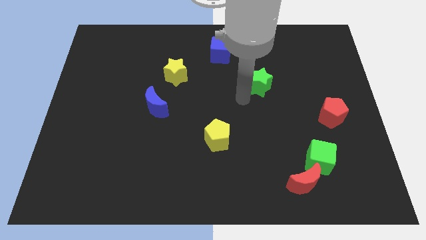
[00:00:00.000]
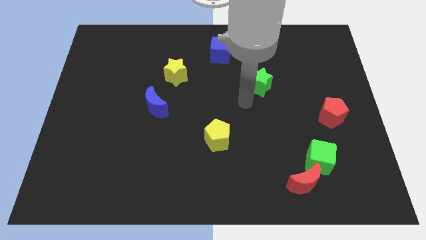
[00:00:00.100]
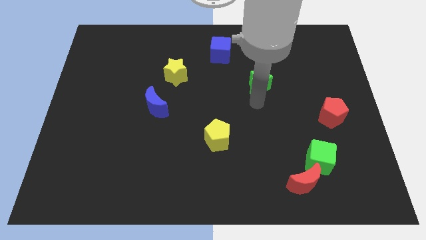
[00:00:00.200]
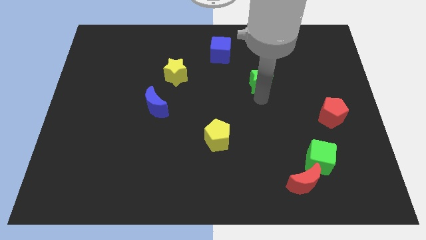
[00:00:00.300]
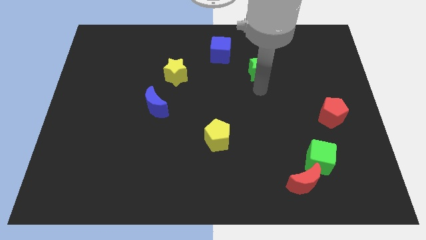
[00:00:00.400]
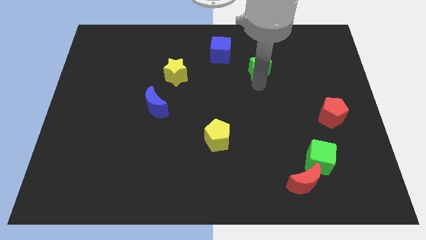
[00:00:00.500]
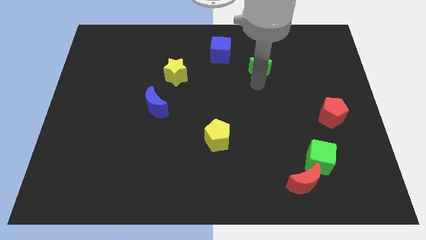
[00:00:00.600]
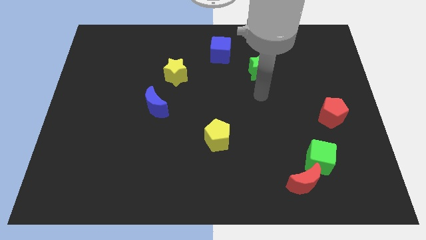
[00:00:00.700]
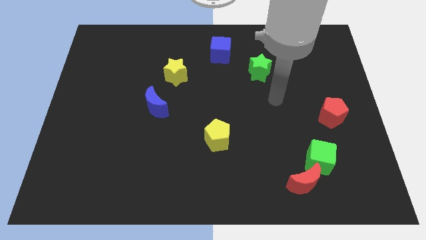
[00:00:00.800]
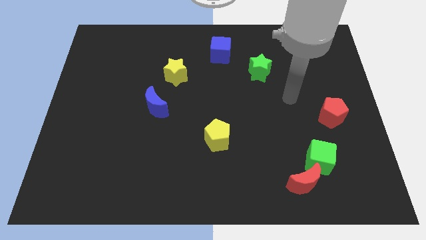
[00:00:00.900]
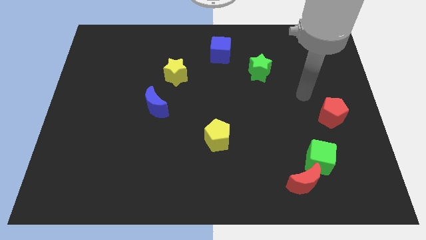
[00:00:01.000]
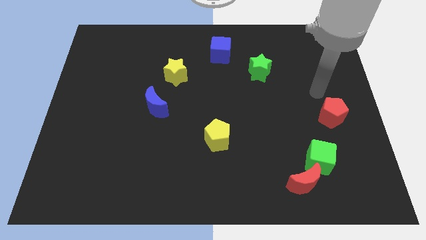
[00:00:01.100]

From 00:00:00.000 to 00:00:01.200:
place green star to the bottom right of blue cube

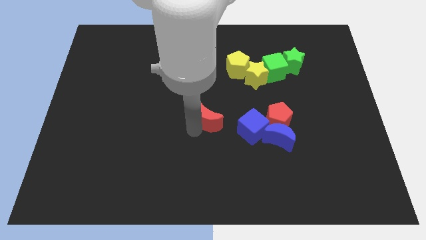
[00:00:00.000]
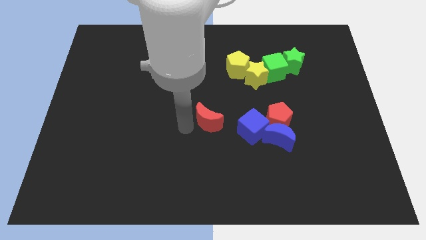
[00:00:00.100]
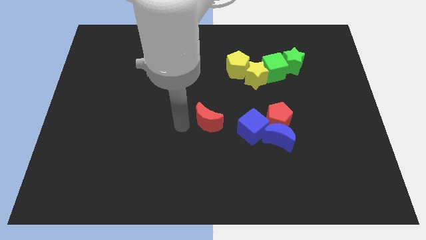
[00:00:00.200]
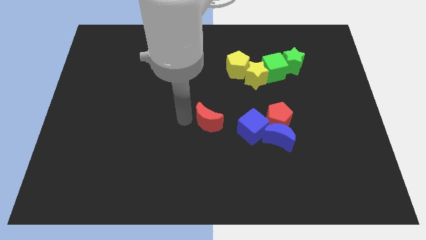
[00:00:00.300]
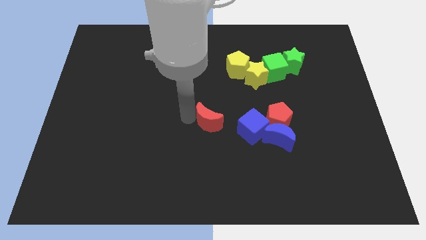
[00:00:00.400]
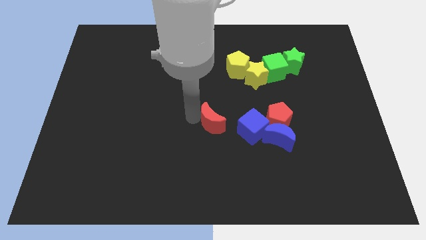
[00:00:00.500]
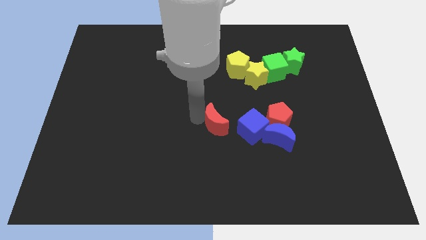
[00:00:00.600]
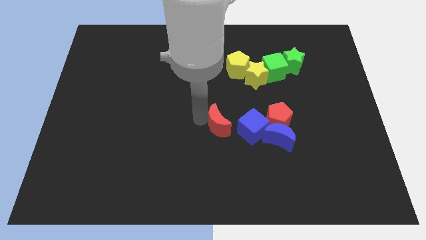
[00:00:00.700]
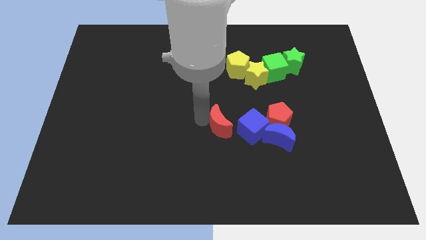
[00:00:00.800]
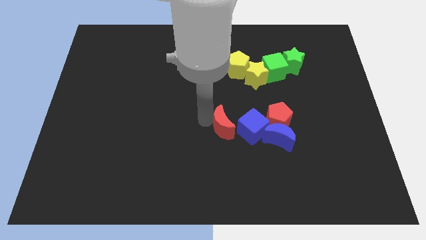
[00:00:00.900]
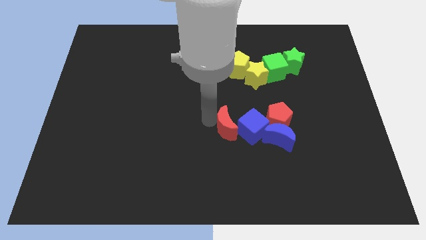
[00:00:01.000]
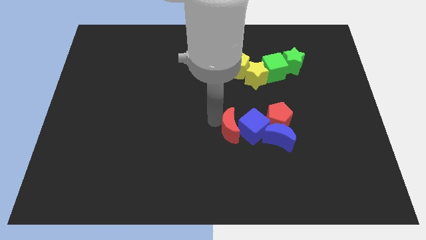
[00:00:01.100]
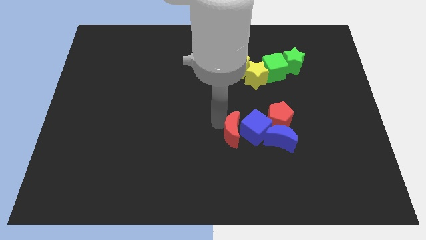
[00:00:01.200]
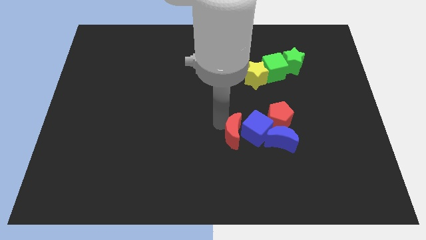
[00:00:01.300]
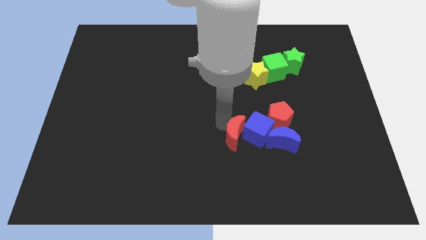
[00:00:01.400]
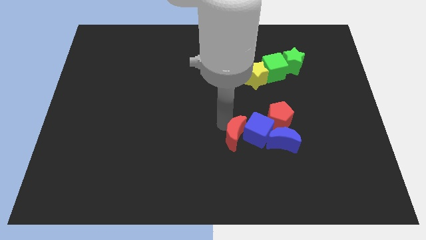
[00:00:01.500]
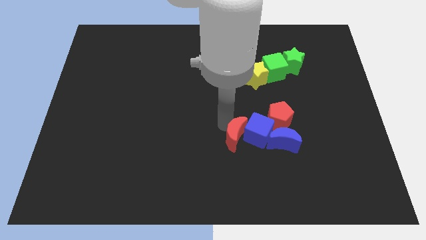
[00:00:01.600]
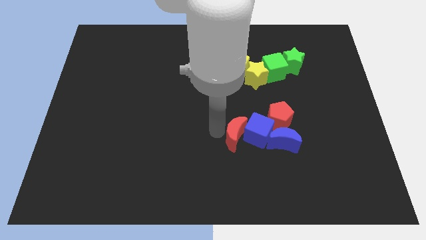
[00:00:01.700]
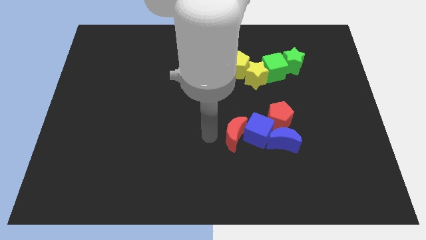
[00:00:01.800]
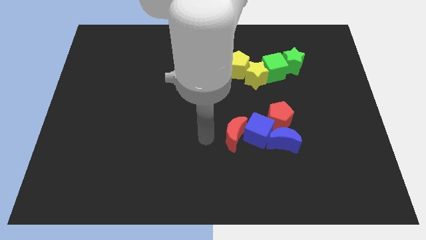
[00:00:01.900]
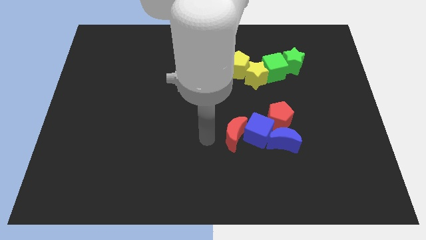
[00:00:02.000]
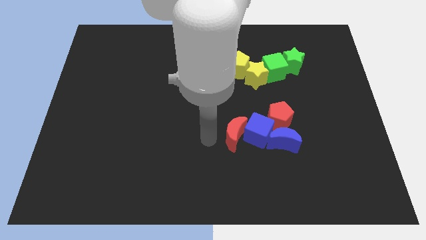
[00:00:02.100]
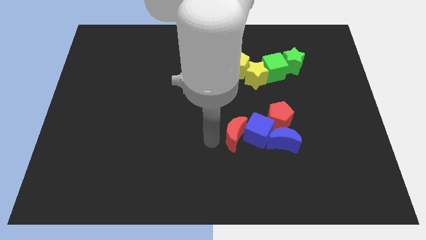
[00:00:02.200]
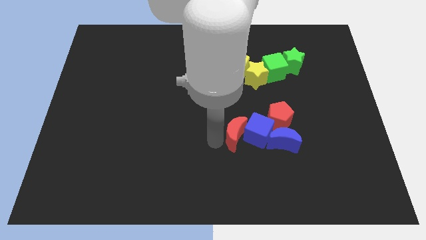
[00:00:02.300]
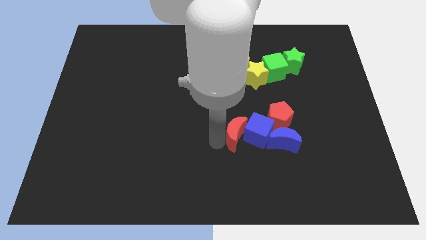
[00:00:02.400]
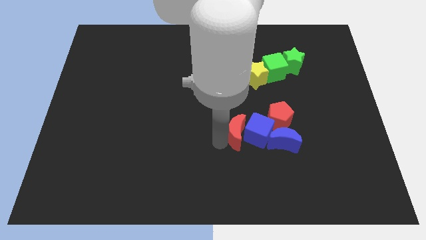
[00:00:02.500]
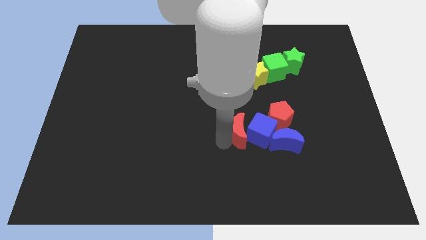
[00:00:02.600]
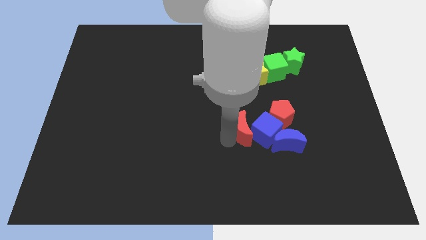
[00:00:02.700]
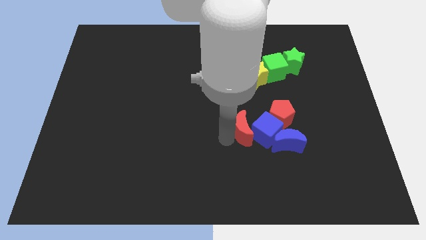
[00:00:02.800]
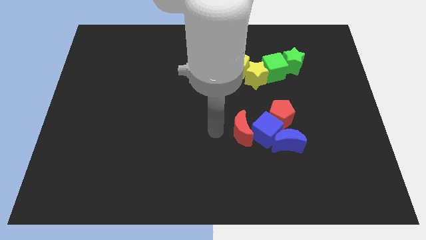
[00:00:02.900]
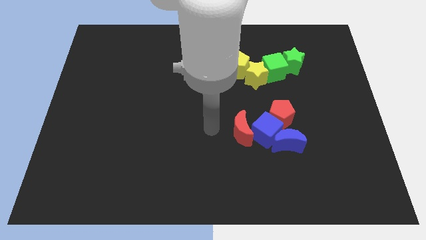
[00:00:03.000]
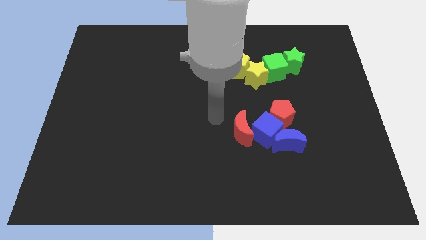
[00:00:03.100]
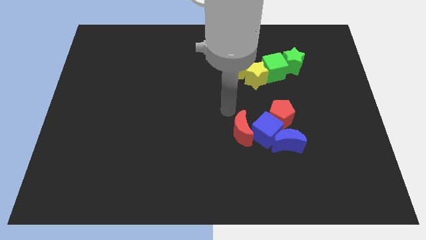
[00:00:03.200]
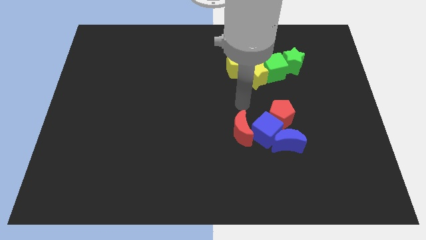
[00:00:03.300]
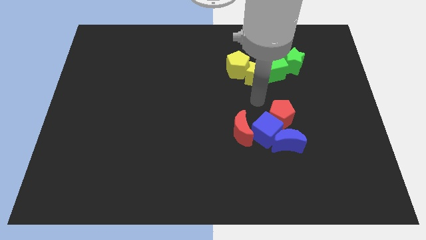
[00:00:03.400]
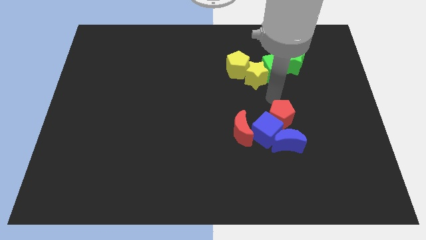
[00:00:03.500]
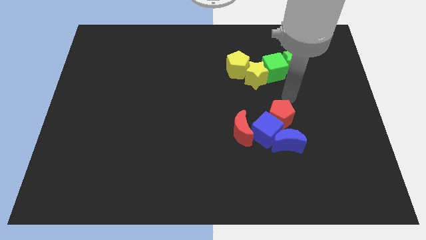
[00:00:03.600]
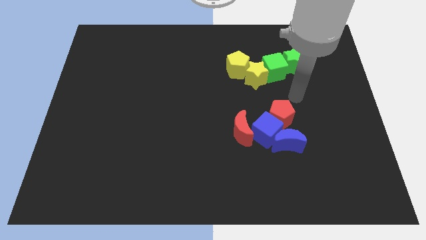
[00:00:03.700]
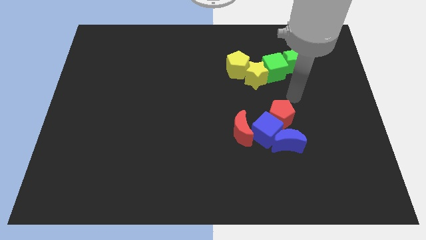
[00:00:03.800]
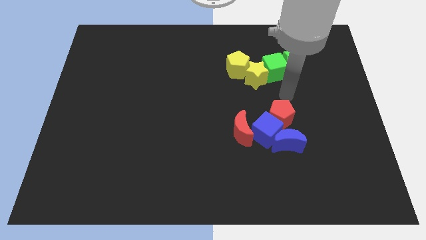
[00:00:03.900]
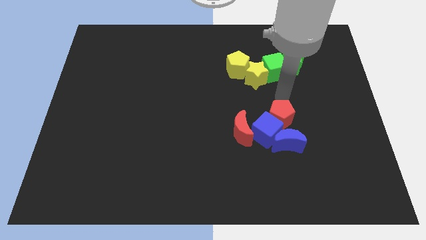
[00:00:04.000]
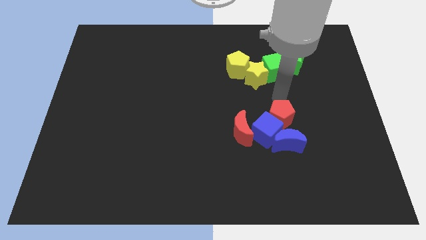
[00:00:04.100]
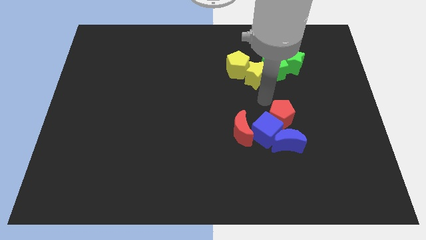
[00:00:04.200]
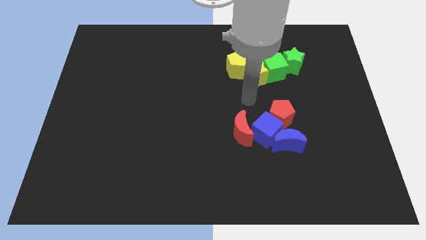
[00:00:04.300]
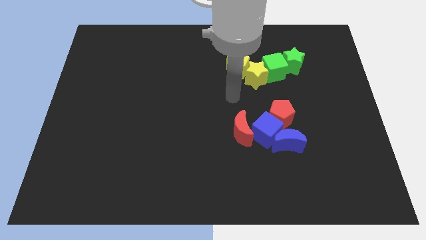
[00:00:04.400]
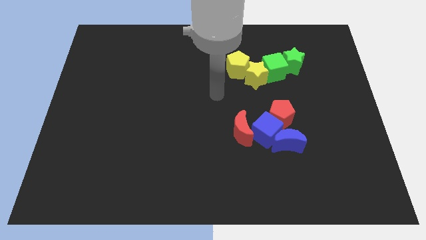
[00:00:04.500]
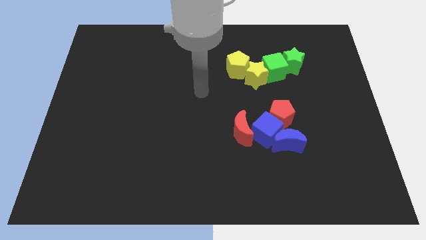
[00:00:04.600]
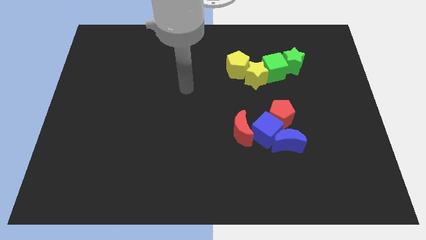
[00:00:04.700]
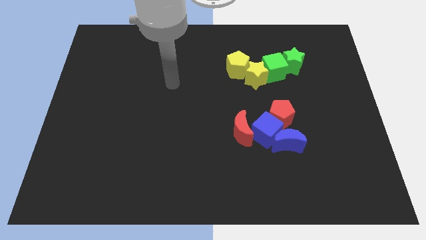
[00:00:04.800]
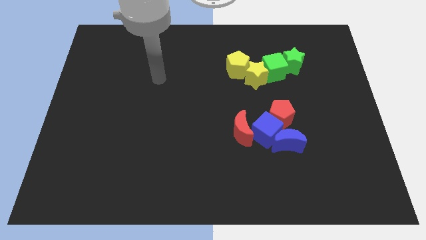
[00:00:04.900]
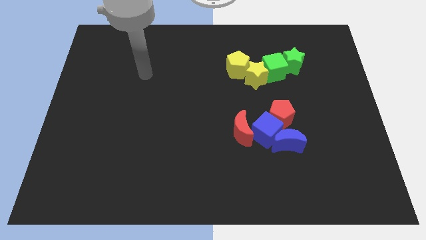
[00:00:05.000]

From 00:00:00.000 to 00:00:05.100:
push the red crescent to the left of the blue cube

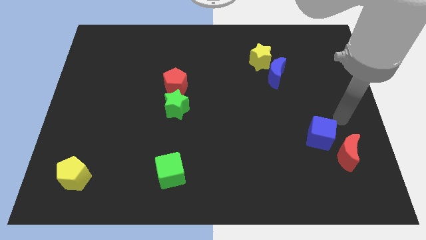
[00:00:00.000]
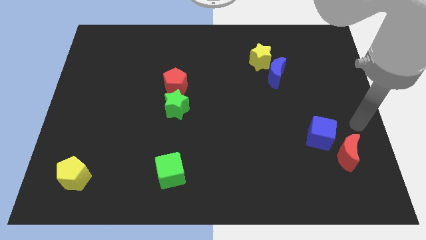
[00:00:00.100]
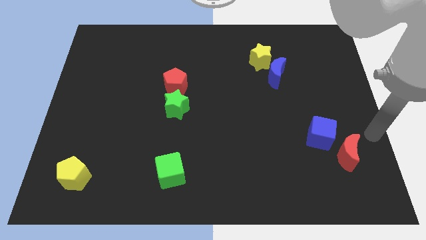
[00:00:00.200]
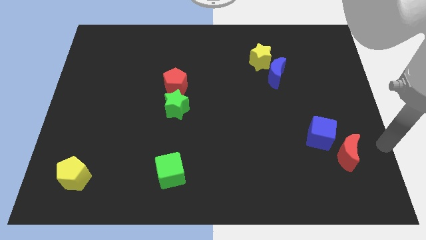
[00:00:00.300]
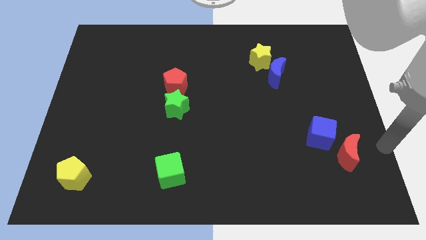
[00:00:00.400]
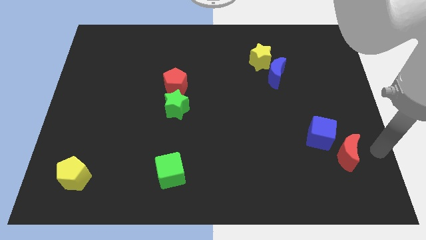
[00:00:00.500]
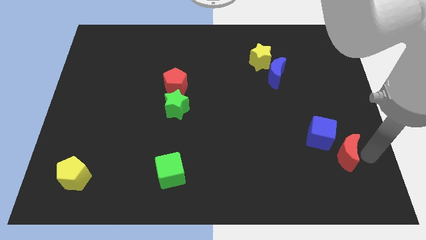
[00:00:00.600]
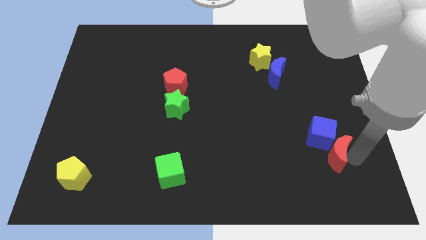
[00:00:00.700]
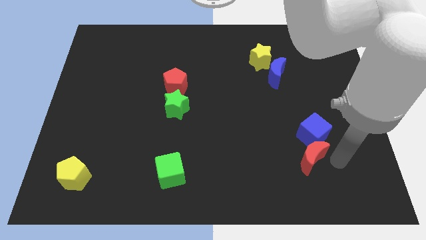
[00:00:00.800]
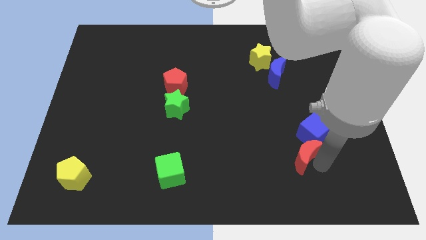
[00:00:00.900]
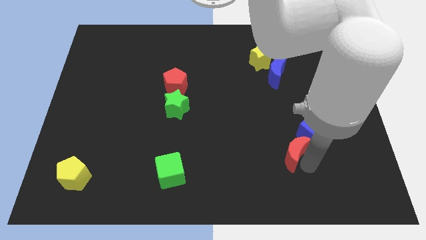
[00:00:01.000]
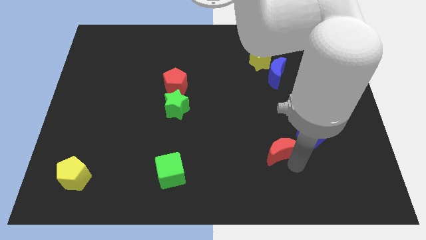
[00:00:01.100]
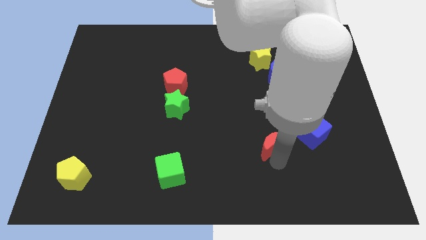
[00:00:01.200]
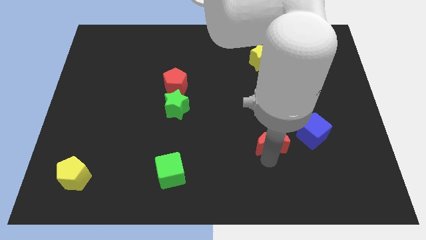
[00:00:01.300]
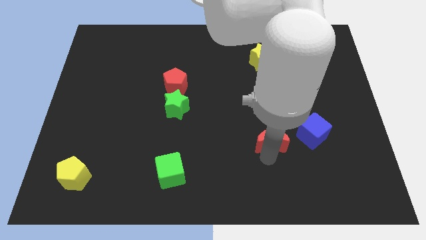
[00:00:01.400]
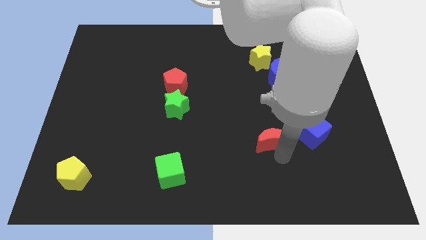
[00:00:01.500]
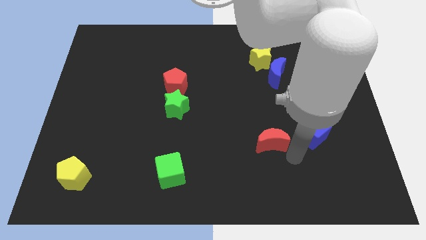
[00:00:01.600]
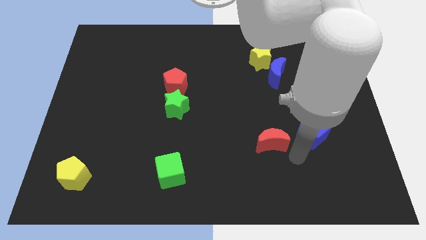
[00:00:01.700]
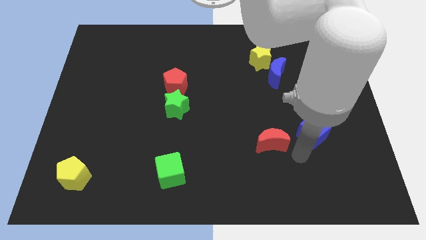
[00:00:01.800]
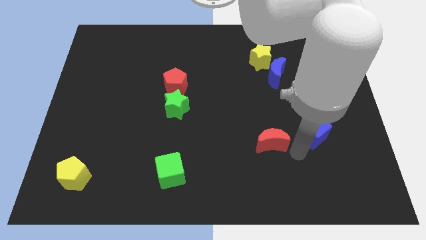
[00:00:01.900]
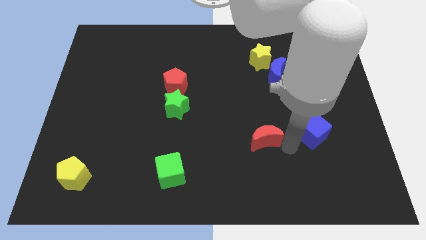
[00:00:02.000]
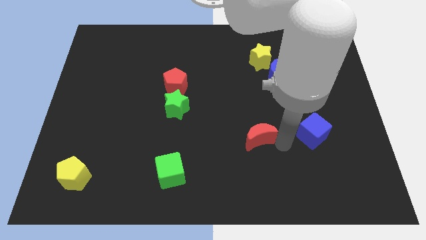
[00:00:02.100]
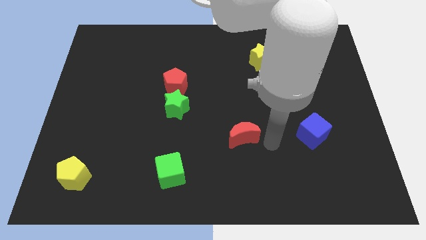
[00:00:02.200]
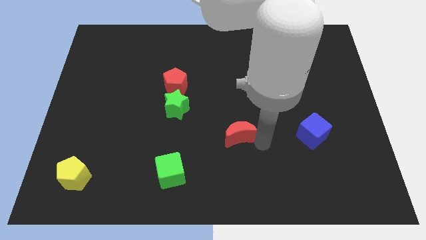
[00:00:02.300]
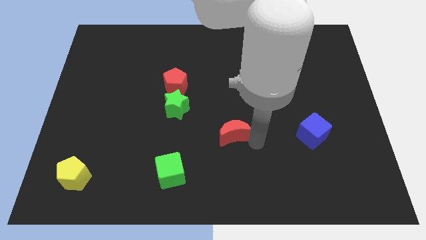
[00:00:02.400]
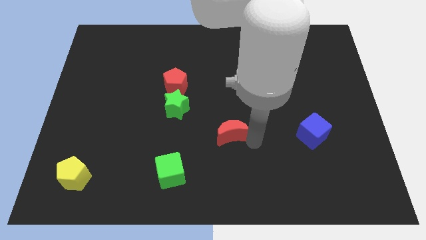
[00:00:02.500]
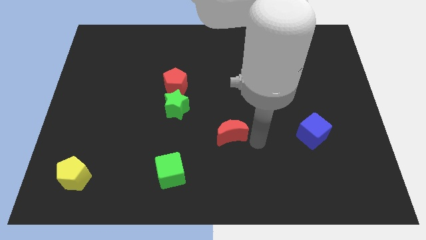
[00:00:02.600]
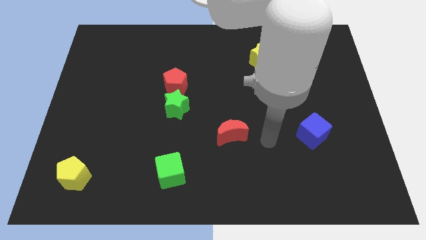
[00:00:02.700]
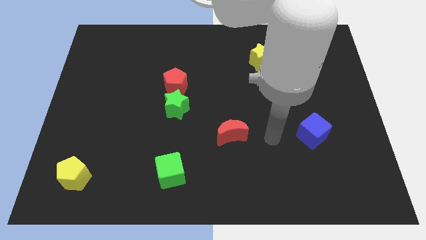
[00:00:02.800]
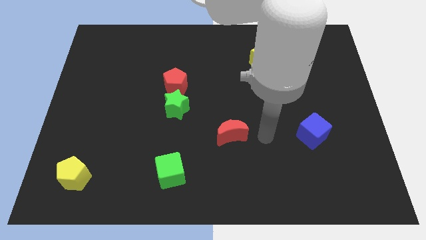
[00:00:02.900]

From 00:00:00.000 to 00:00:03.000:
move the red moon parallel to the left of the blue cube
